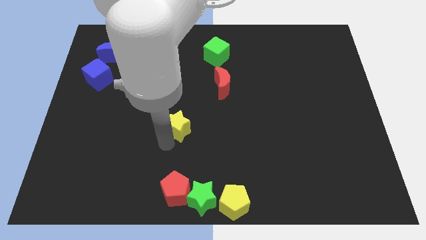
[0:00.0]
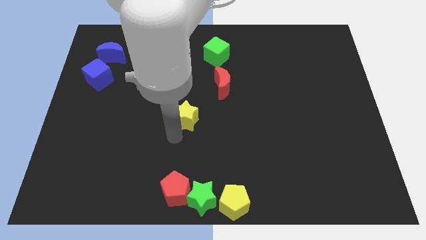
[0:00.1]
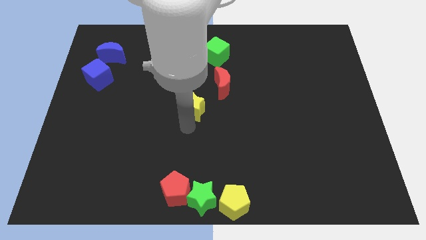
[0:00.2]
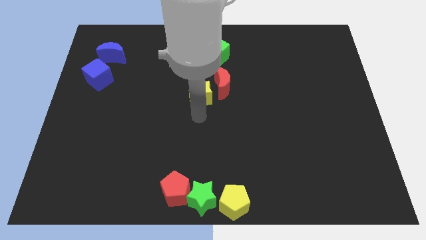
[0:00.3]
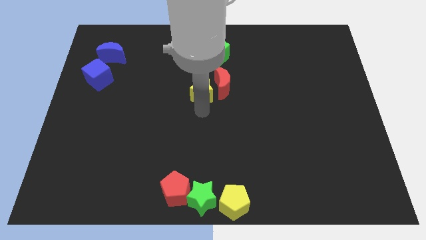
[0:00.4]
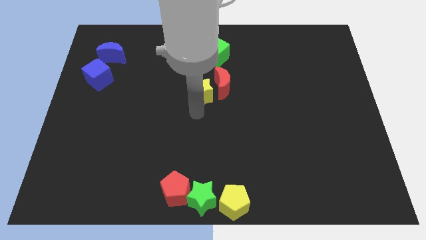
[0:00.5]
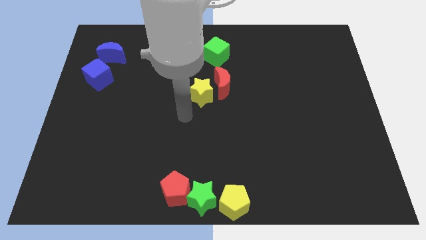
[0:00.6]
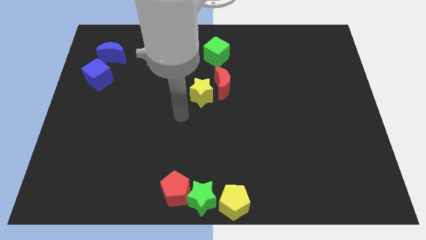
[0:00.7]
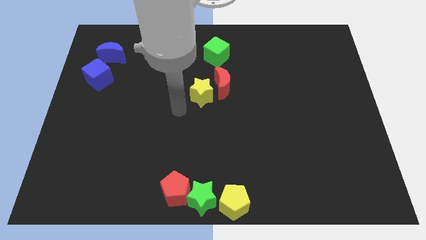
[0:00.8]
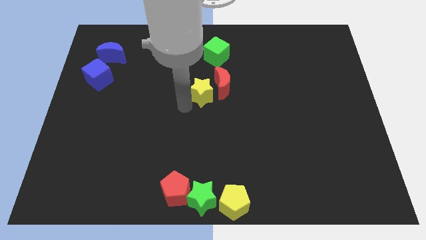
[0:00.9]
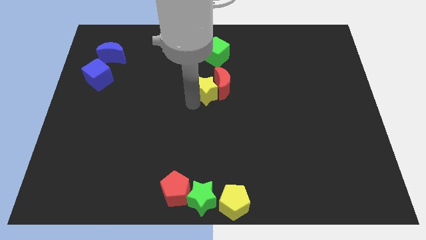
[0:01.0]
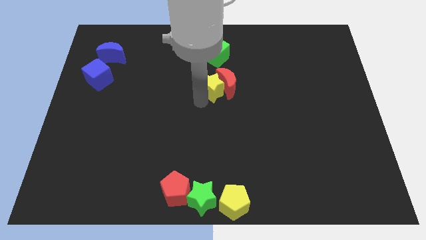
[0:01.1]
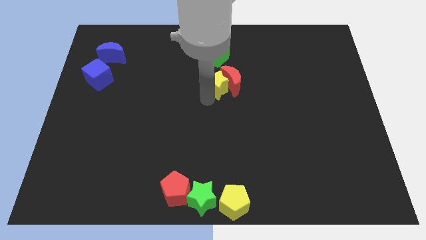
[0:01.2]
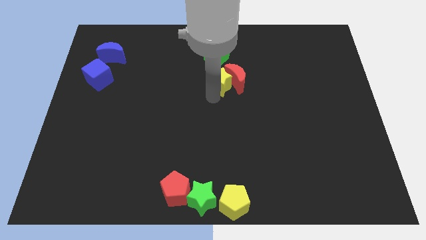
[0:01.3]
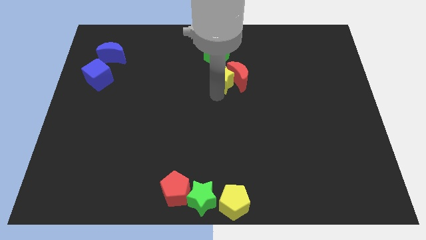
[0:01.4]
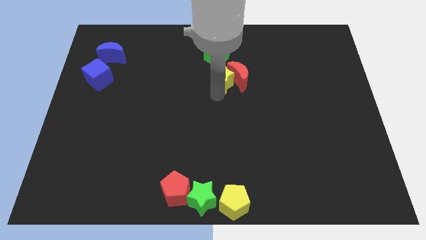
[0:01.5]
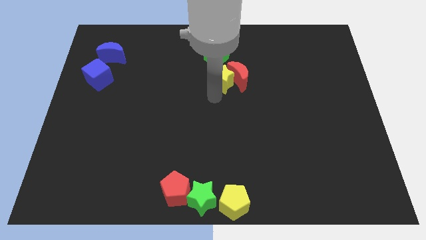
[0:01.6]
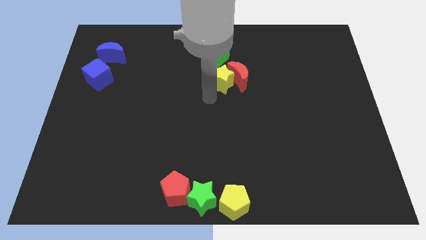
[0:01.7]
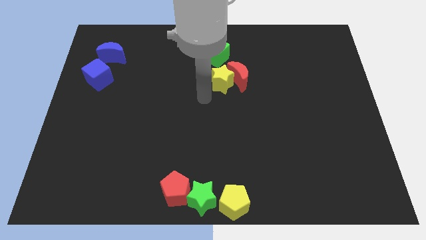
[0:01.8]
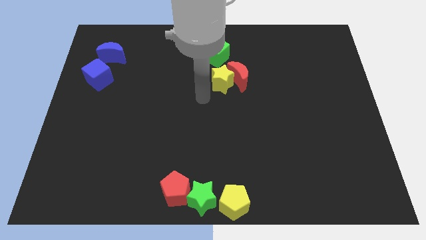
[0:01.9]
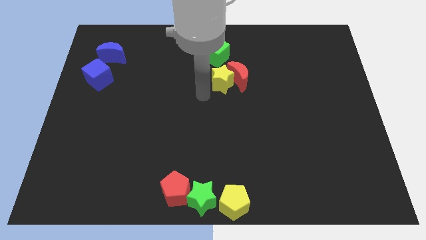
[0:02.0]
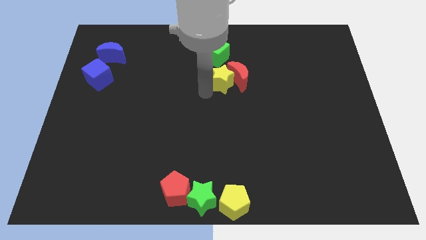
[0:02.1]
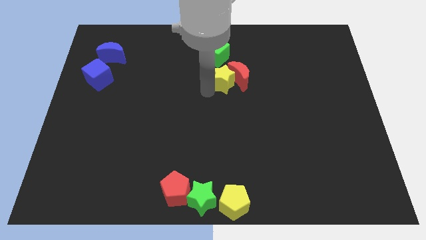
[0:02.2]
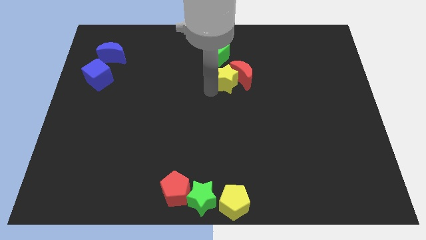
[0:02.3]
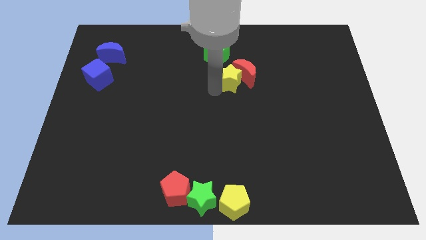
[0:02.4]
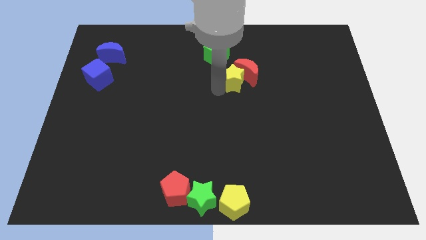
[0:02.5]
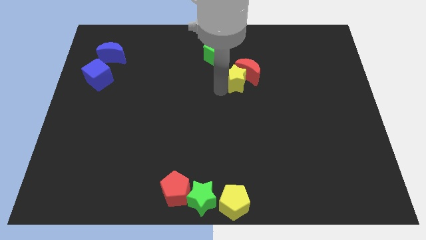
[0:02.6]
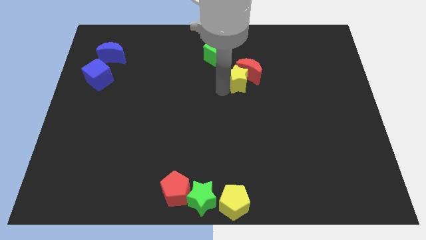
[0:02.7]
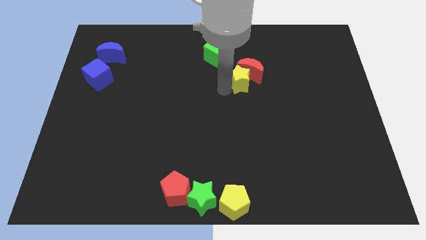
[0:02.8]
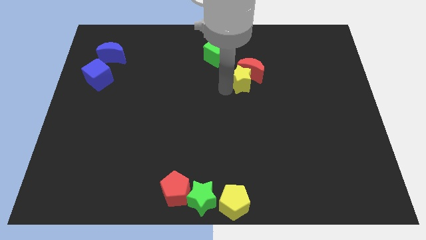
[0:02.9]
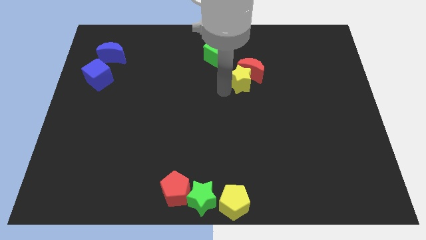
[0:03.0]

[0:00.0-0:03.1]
push the yellow star next to the red moon

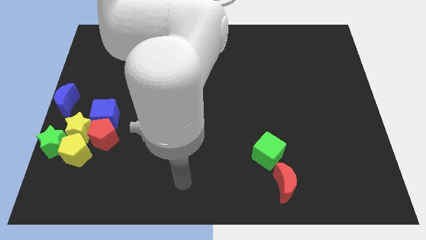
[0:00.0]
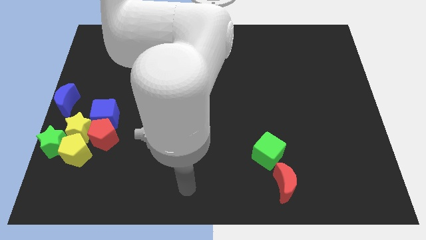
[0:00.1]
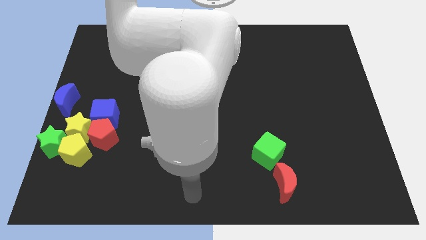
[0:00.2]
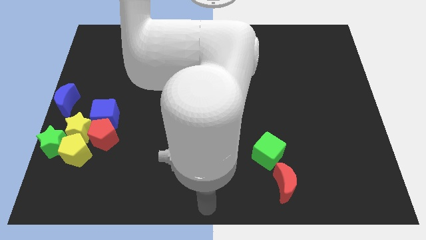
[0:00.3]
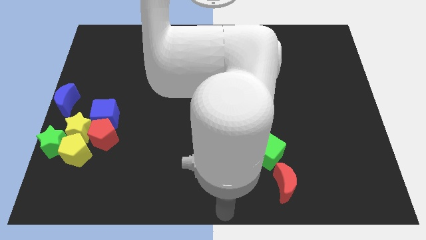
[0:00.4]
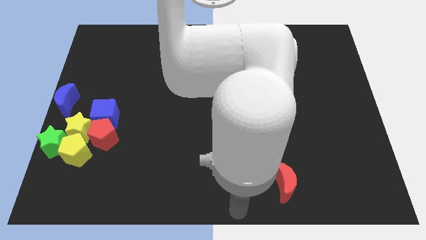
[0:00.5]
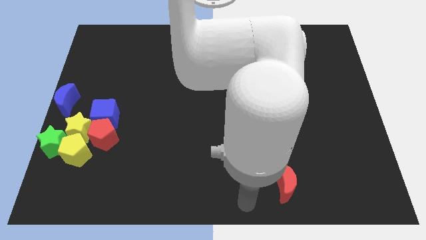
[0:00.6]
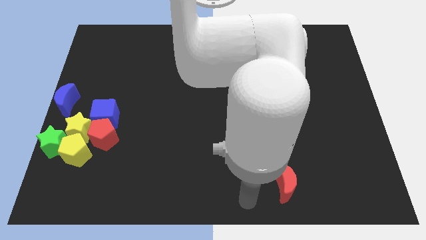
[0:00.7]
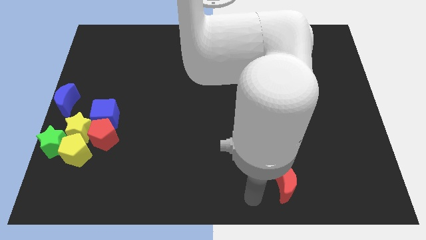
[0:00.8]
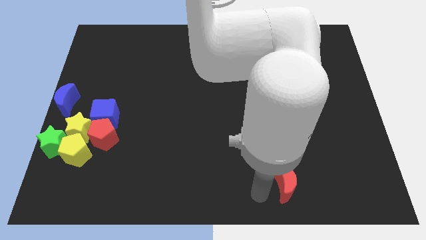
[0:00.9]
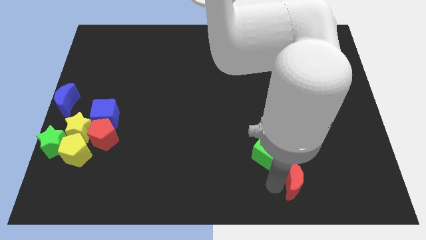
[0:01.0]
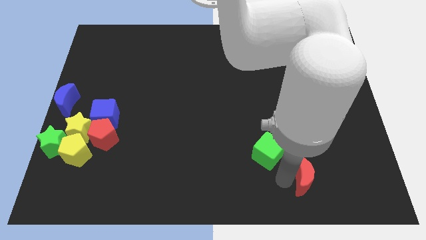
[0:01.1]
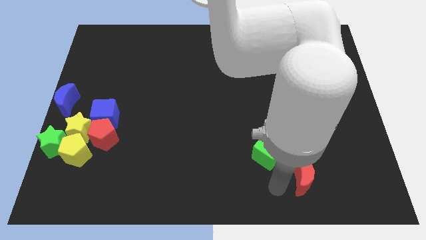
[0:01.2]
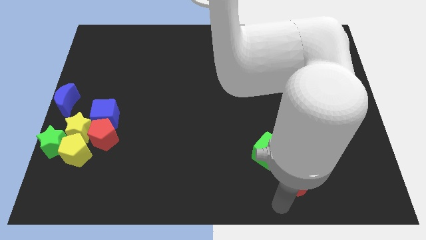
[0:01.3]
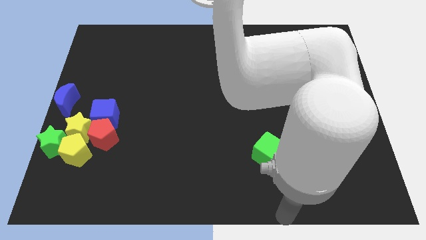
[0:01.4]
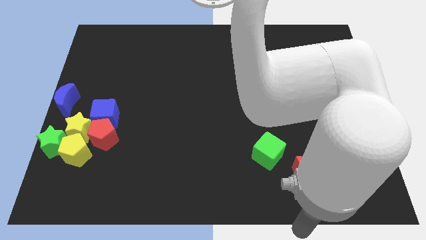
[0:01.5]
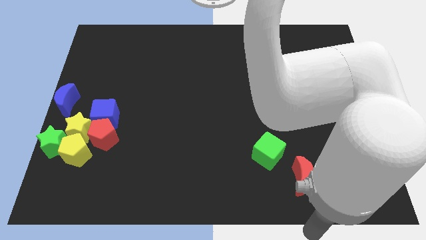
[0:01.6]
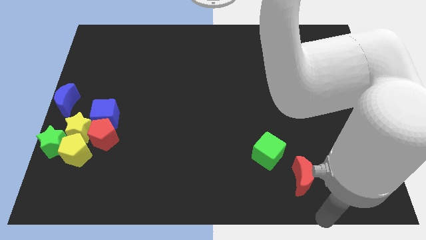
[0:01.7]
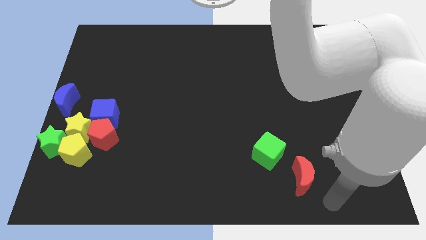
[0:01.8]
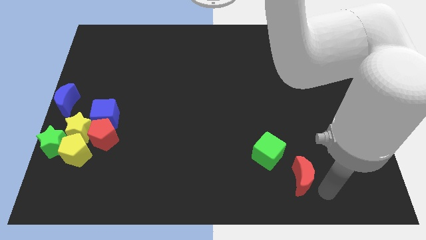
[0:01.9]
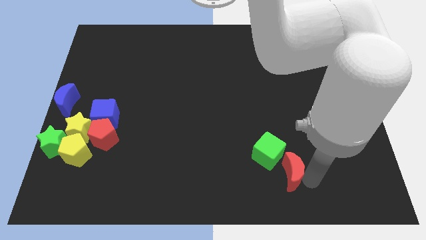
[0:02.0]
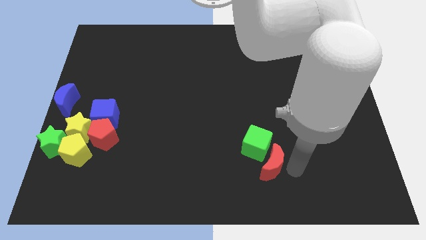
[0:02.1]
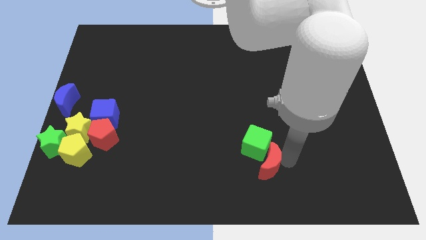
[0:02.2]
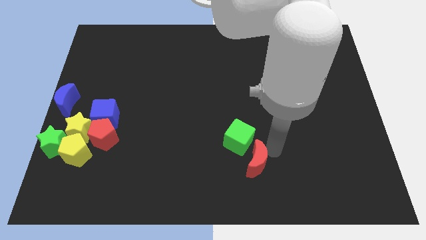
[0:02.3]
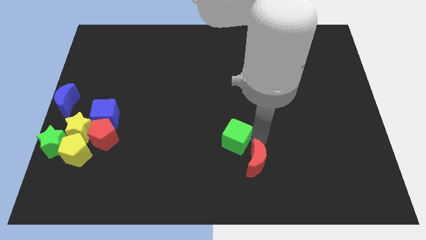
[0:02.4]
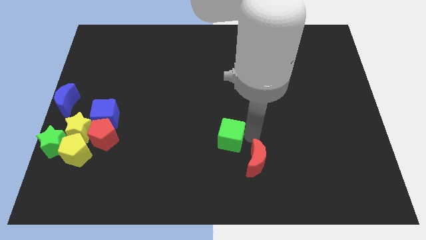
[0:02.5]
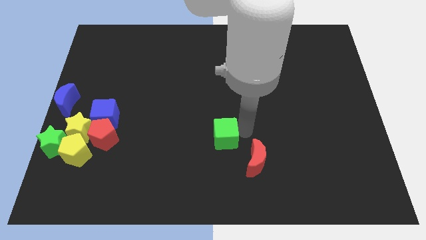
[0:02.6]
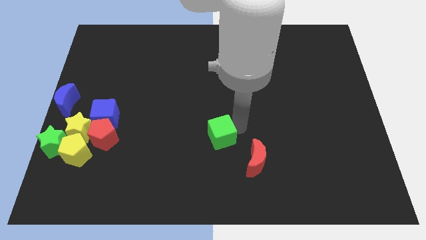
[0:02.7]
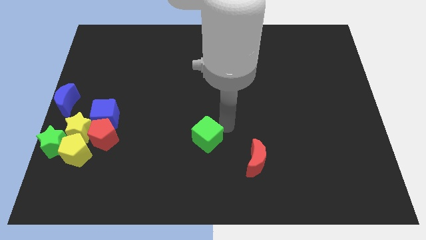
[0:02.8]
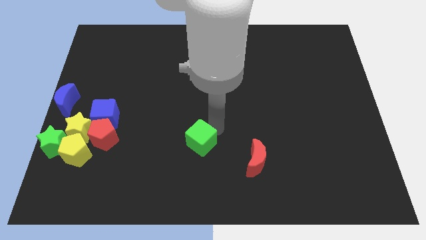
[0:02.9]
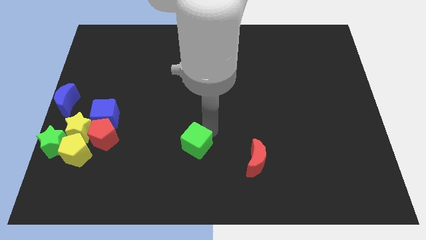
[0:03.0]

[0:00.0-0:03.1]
move green cube red moon to the center

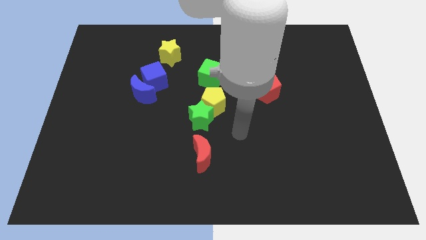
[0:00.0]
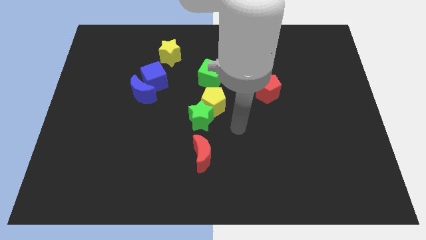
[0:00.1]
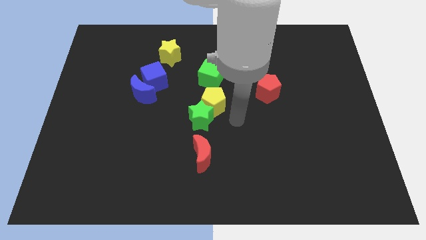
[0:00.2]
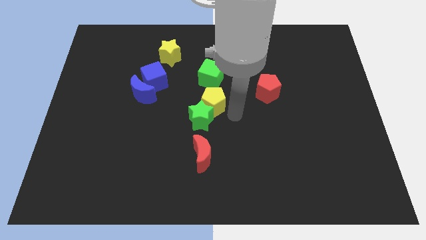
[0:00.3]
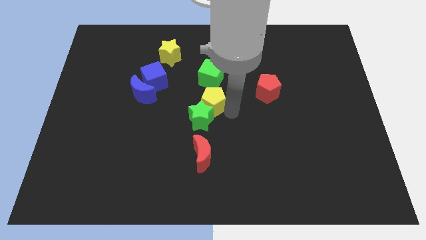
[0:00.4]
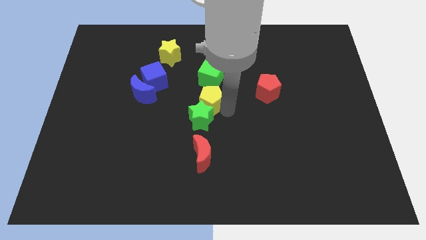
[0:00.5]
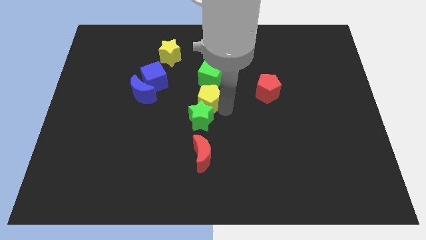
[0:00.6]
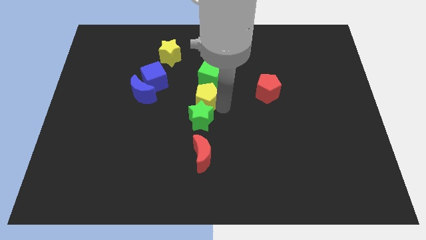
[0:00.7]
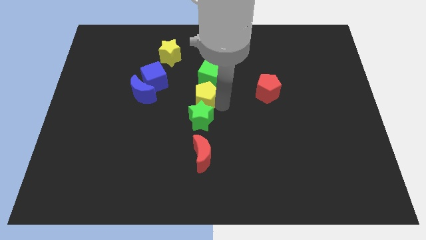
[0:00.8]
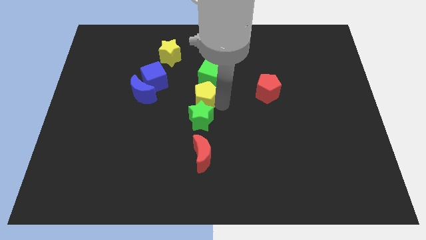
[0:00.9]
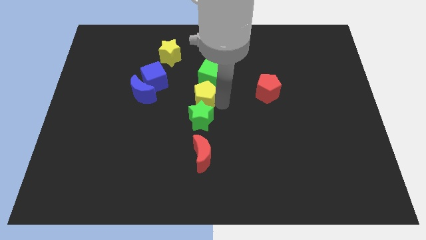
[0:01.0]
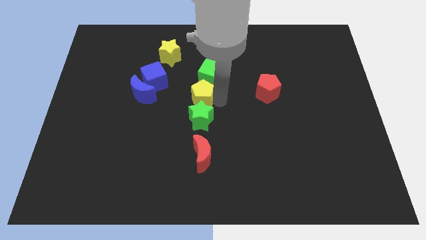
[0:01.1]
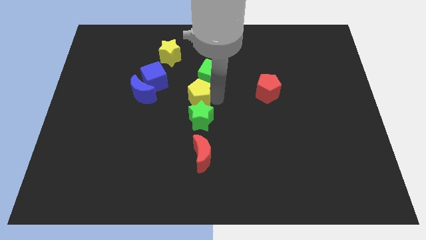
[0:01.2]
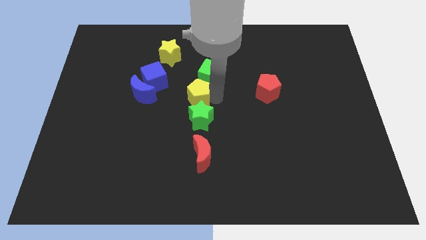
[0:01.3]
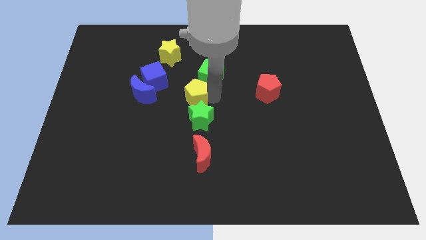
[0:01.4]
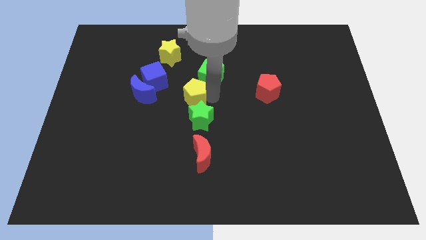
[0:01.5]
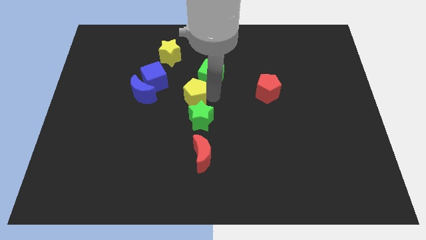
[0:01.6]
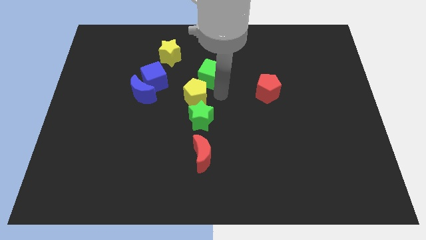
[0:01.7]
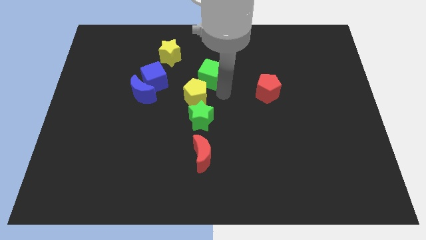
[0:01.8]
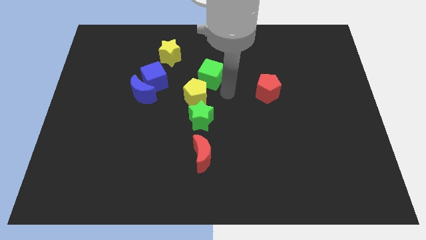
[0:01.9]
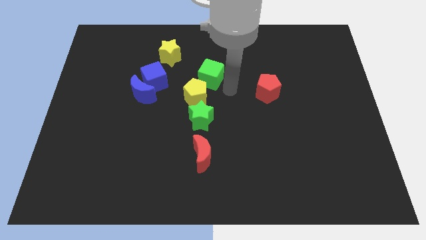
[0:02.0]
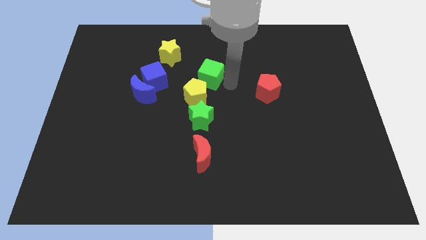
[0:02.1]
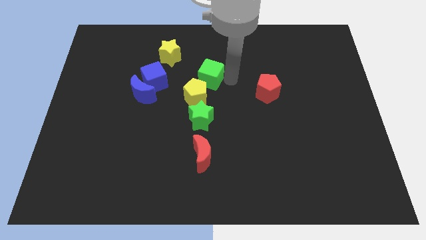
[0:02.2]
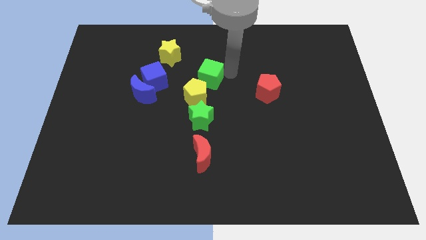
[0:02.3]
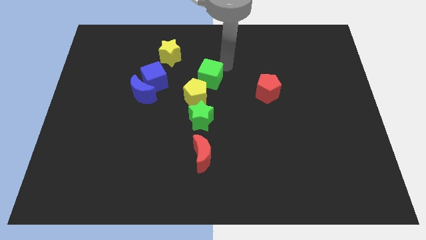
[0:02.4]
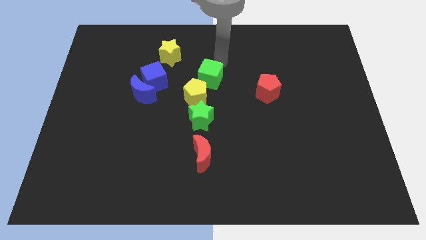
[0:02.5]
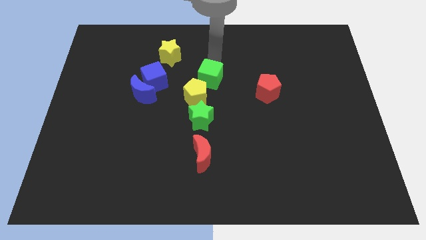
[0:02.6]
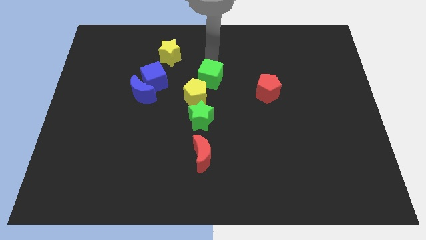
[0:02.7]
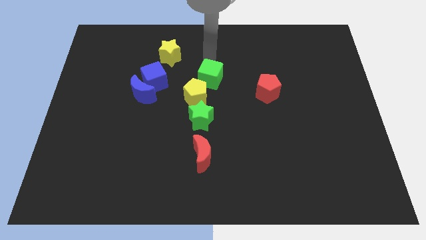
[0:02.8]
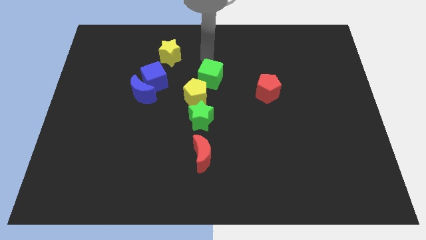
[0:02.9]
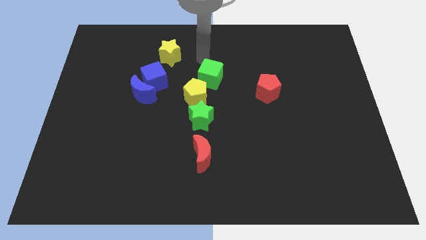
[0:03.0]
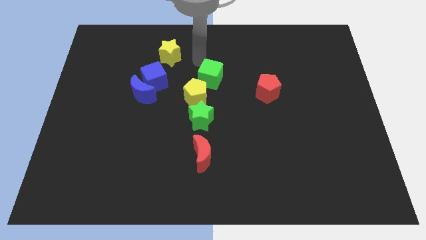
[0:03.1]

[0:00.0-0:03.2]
slide the yellow pentagon to the top left side of the green star
